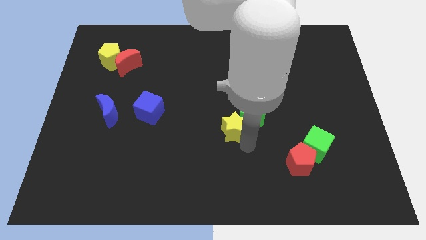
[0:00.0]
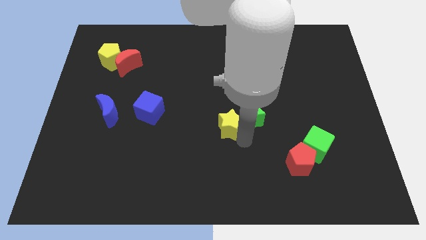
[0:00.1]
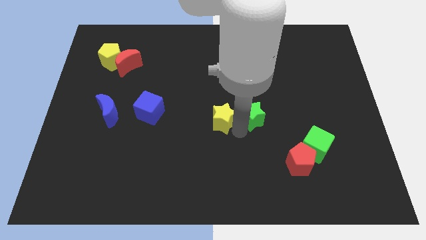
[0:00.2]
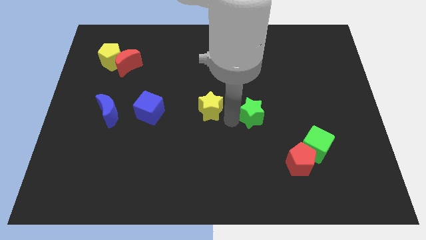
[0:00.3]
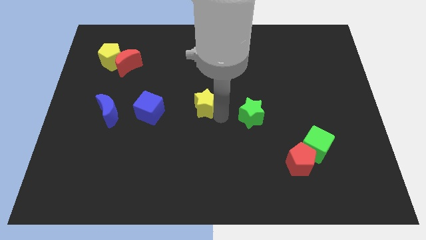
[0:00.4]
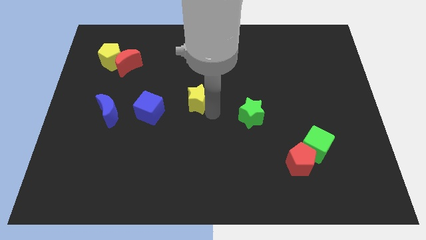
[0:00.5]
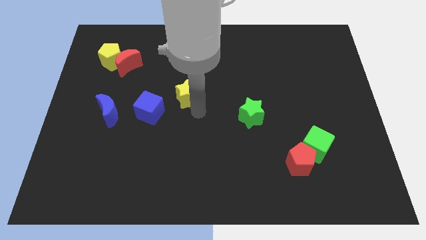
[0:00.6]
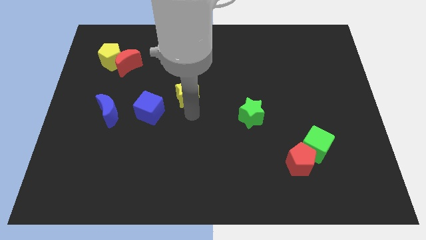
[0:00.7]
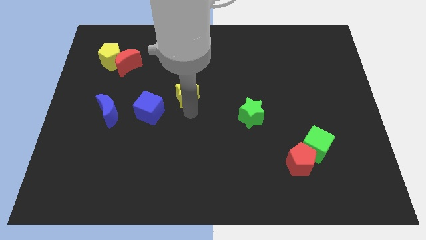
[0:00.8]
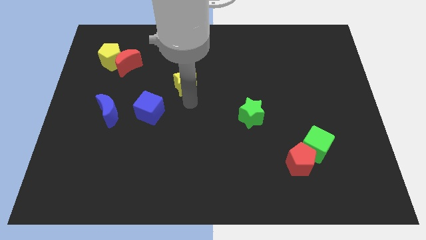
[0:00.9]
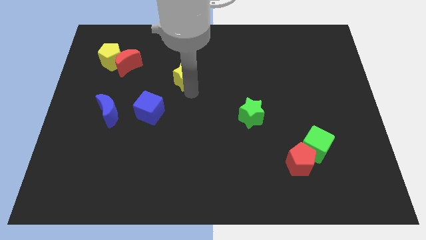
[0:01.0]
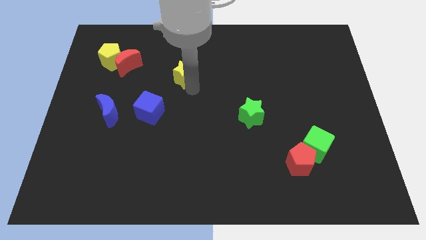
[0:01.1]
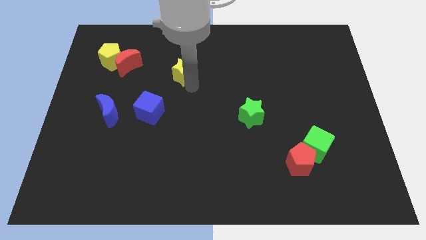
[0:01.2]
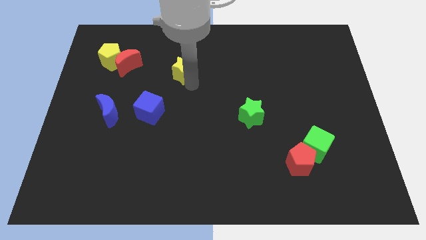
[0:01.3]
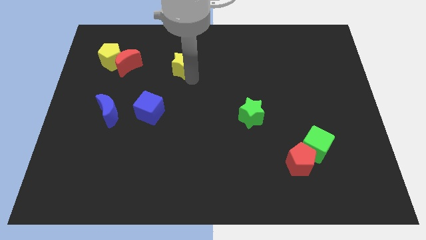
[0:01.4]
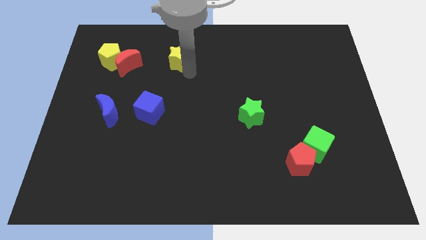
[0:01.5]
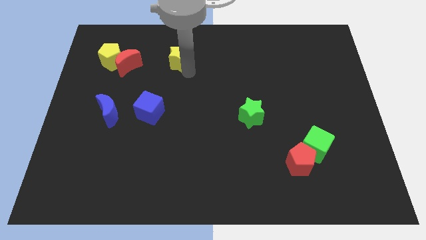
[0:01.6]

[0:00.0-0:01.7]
move the yellow star right to the red moon

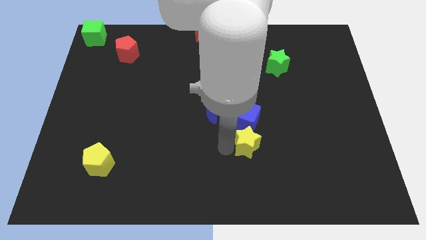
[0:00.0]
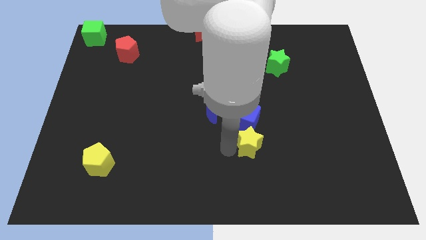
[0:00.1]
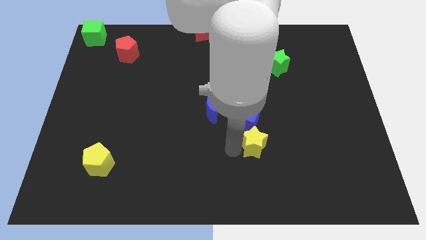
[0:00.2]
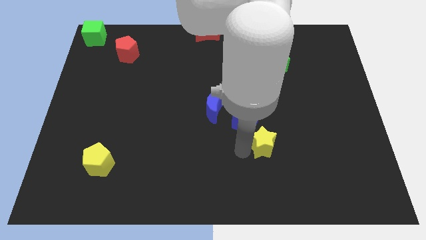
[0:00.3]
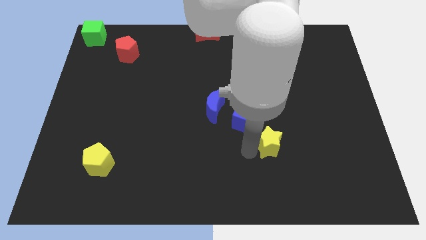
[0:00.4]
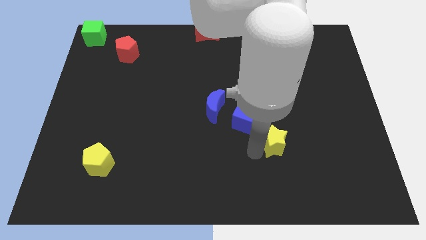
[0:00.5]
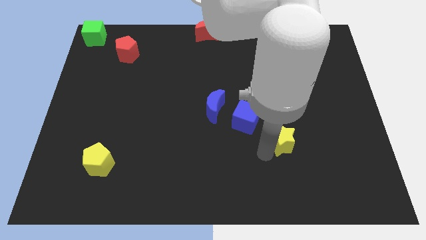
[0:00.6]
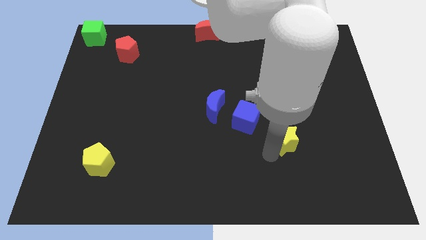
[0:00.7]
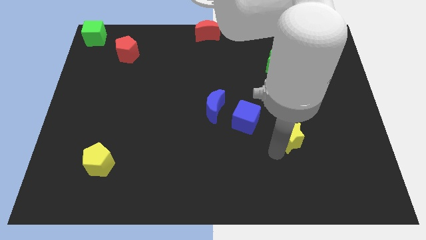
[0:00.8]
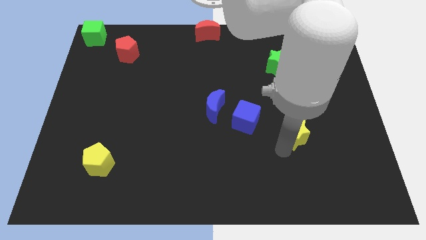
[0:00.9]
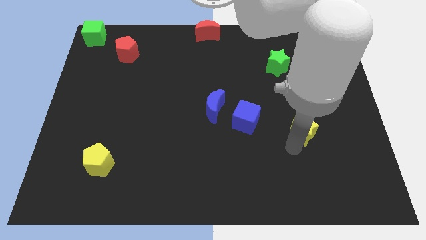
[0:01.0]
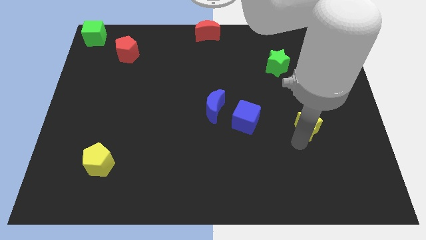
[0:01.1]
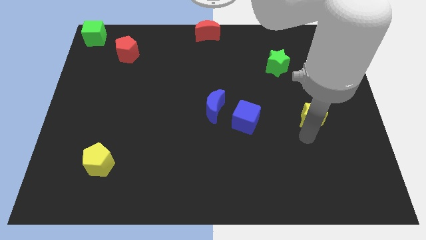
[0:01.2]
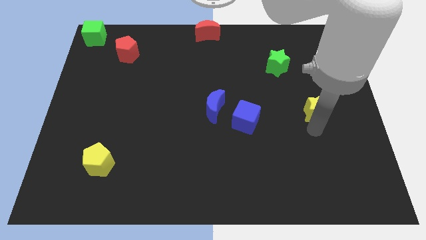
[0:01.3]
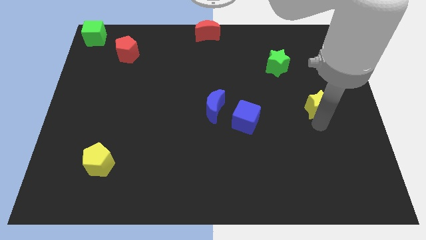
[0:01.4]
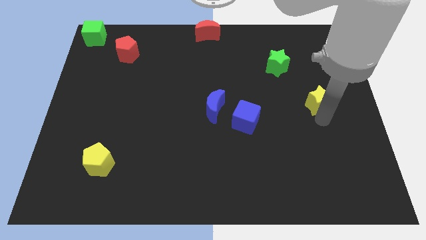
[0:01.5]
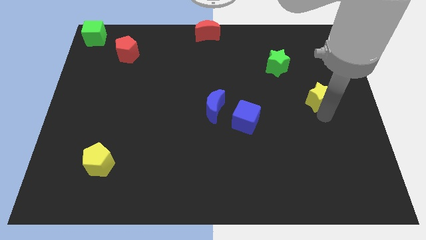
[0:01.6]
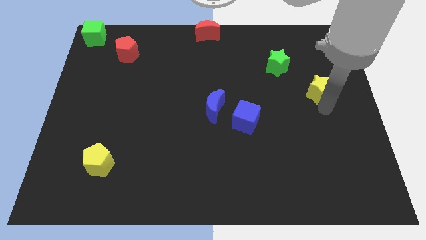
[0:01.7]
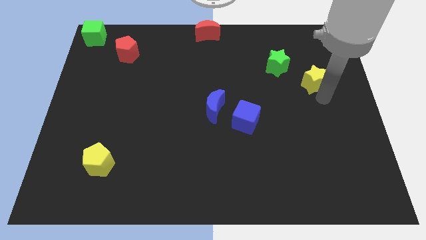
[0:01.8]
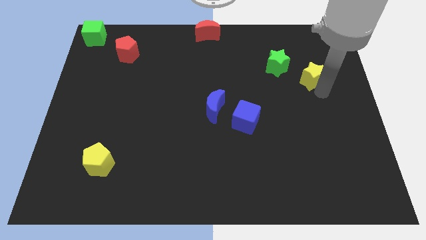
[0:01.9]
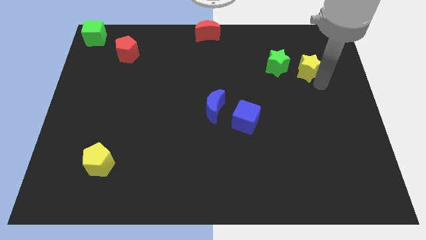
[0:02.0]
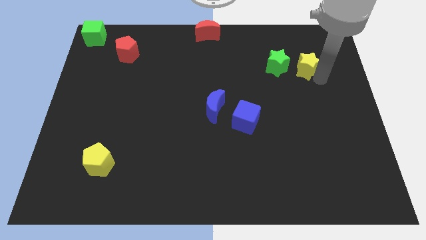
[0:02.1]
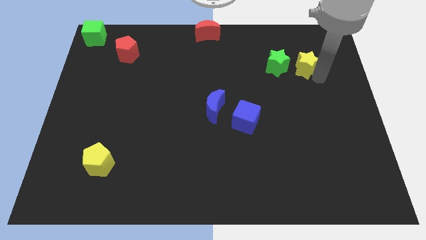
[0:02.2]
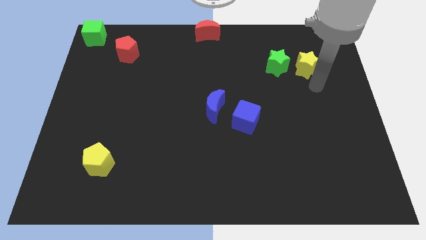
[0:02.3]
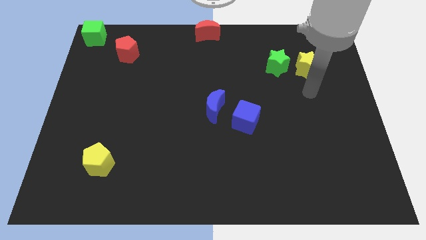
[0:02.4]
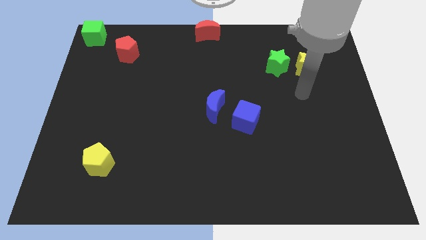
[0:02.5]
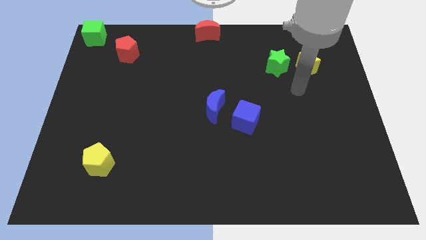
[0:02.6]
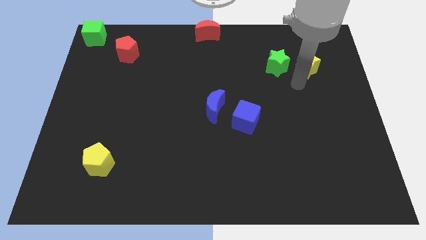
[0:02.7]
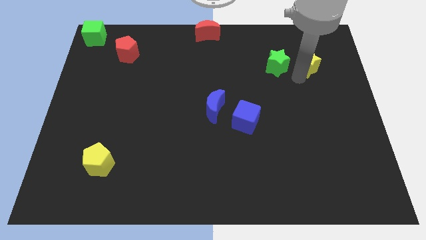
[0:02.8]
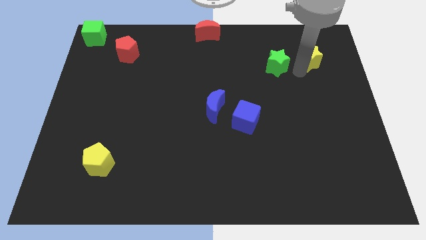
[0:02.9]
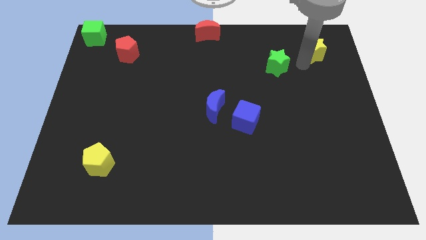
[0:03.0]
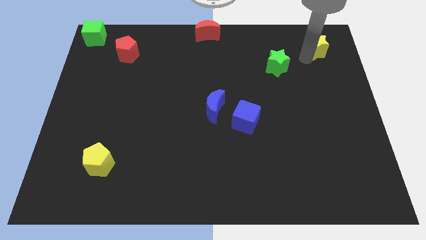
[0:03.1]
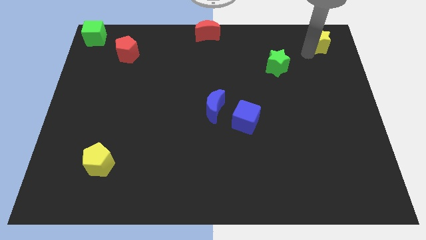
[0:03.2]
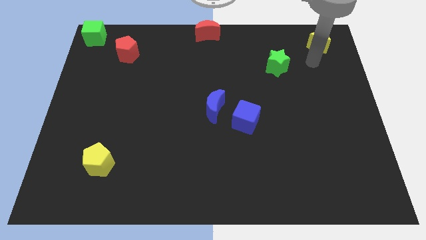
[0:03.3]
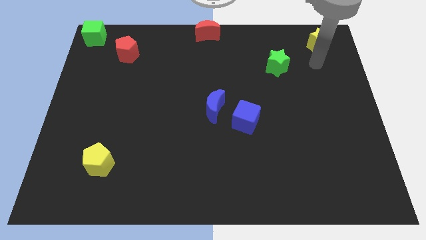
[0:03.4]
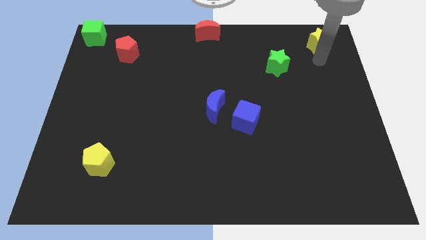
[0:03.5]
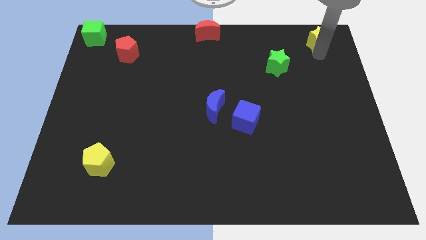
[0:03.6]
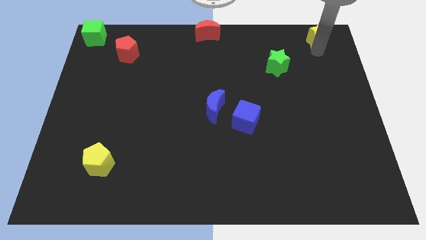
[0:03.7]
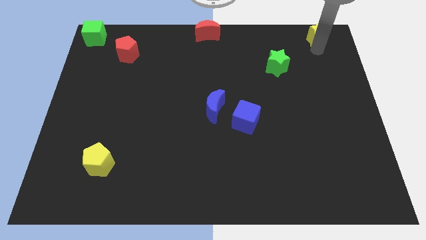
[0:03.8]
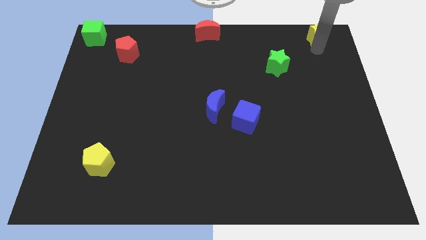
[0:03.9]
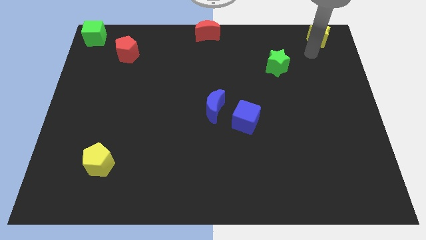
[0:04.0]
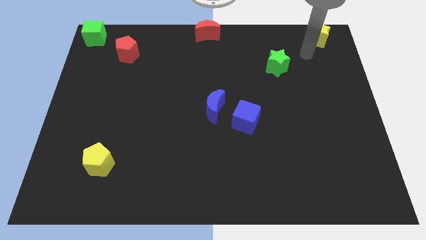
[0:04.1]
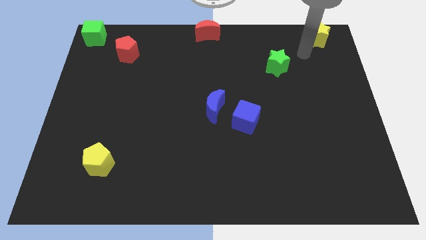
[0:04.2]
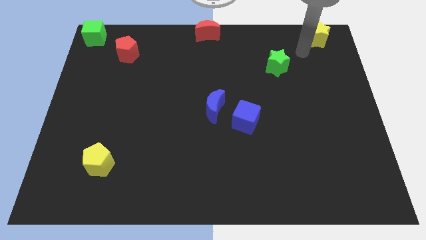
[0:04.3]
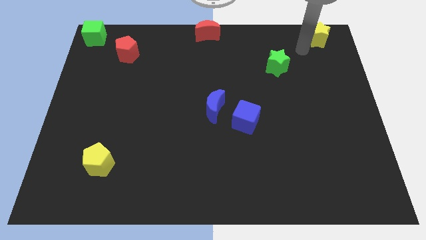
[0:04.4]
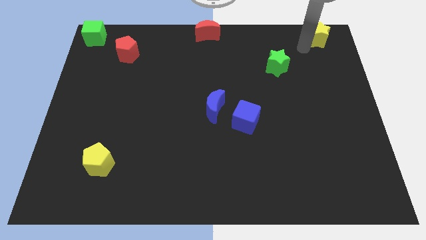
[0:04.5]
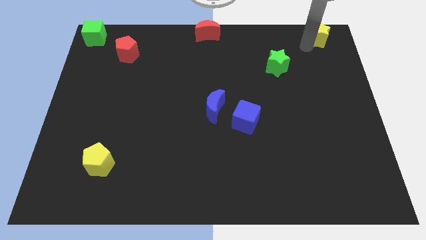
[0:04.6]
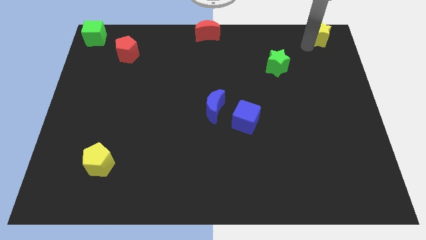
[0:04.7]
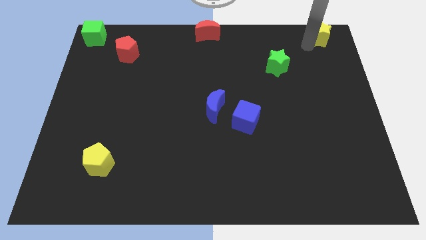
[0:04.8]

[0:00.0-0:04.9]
place the yellow star at the top right of the green star

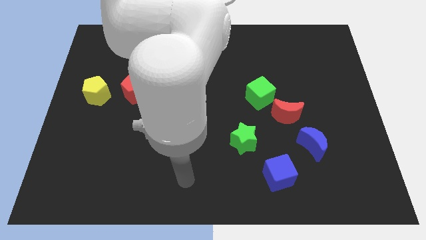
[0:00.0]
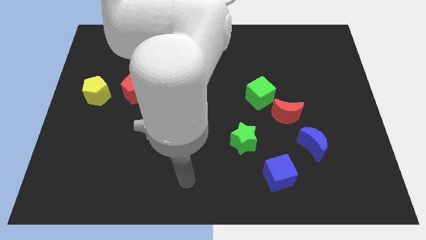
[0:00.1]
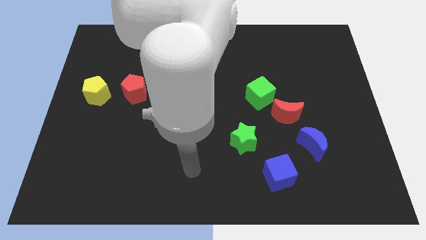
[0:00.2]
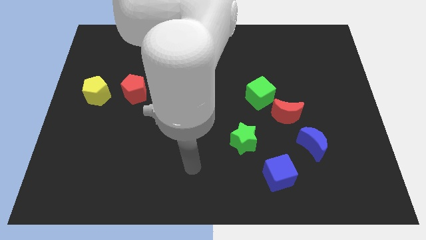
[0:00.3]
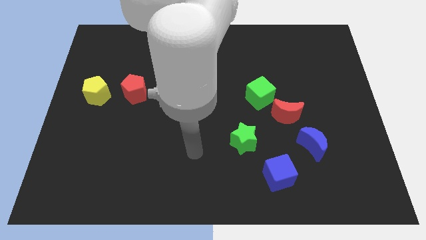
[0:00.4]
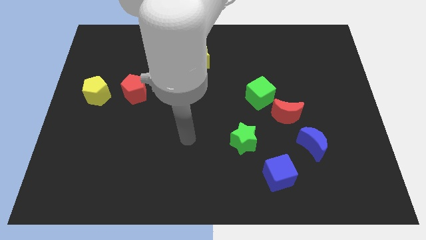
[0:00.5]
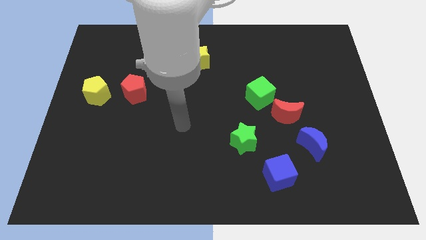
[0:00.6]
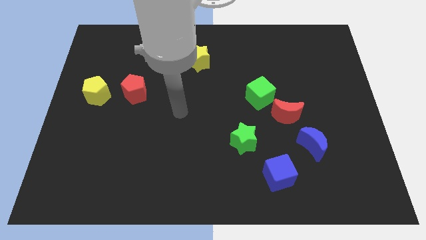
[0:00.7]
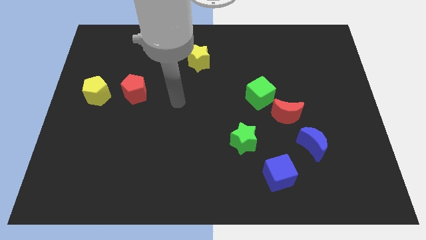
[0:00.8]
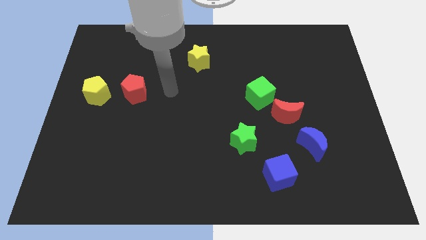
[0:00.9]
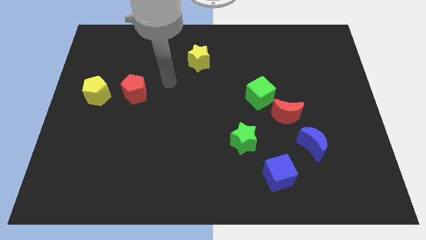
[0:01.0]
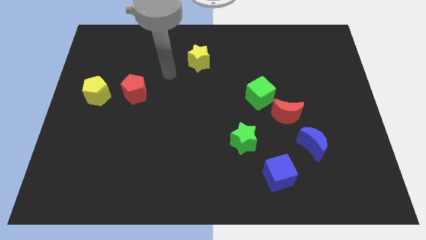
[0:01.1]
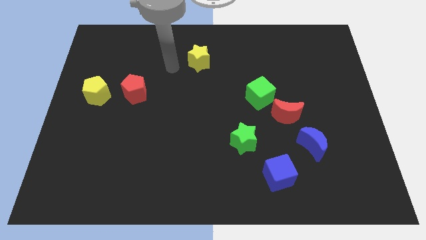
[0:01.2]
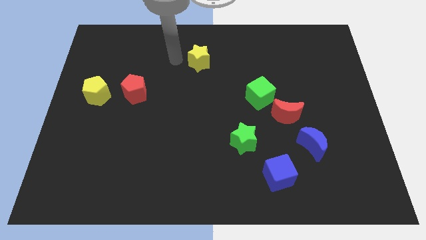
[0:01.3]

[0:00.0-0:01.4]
point your hand at the left side of the yellow star

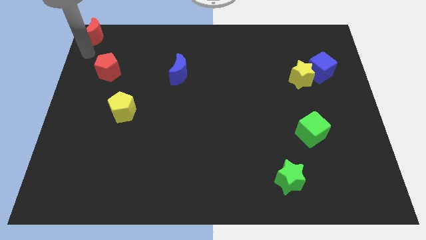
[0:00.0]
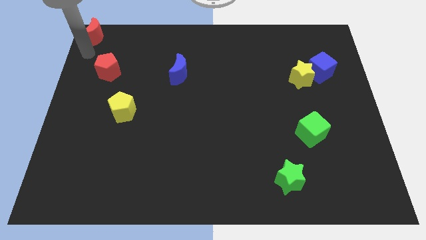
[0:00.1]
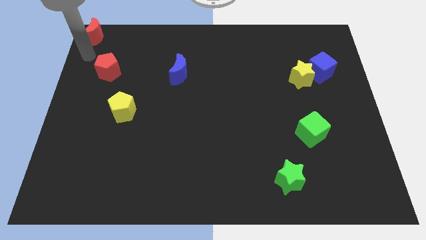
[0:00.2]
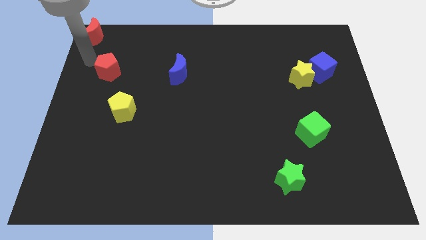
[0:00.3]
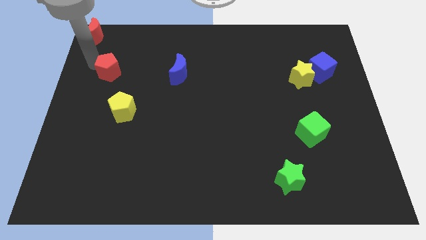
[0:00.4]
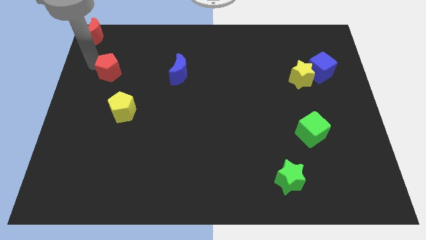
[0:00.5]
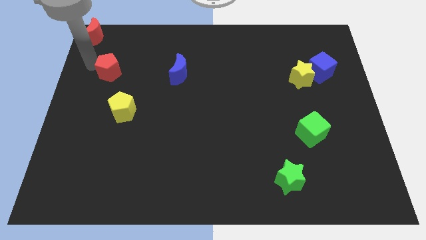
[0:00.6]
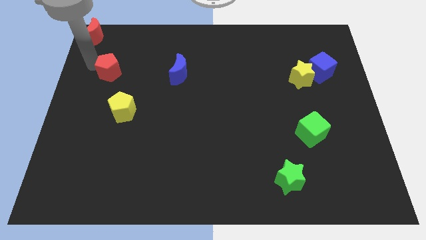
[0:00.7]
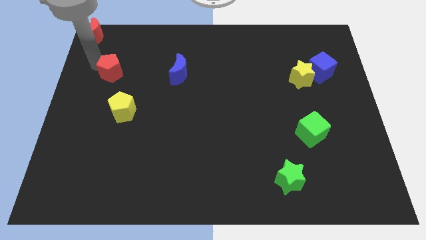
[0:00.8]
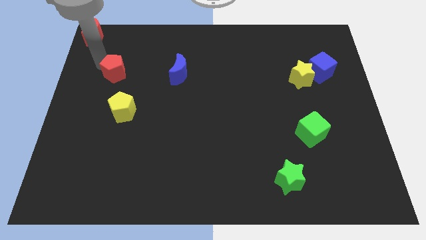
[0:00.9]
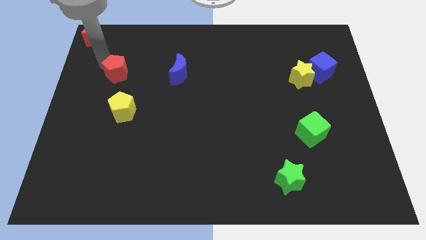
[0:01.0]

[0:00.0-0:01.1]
move the red pentagon slightly
